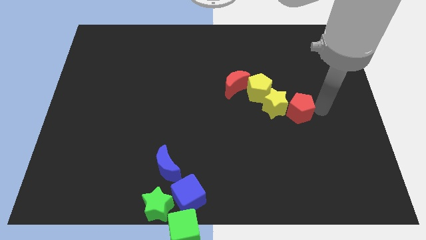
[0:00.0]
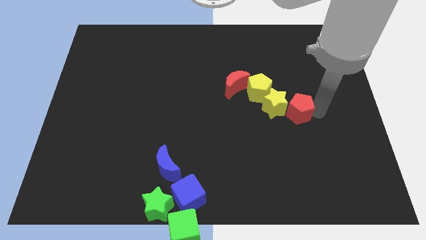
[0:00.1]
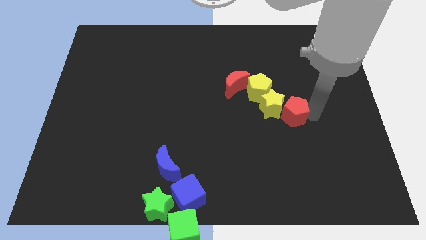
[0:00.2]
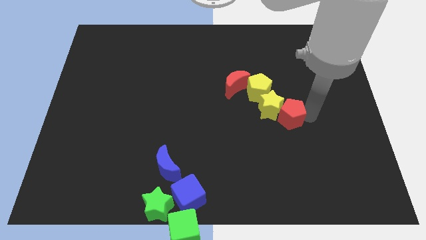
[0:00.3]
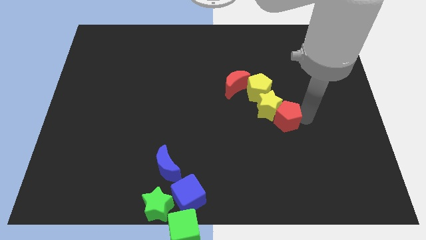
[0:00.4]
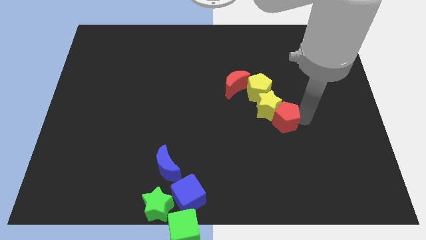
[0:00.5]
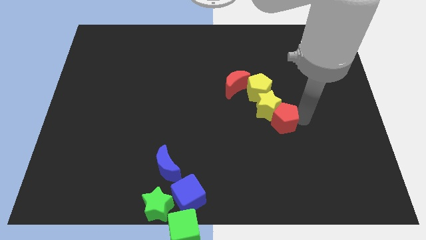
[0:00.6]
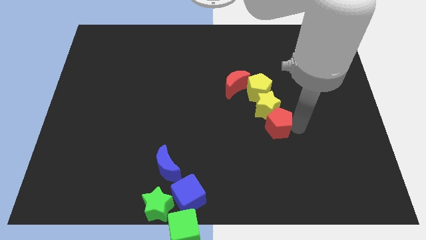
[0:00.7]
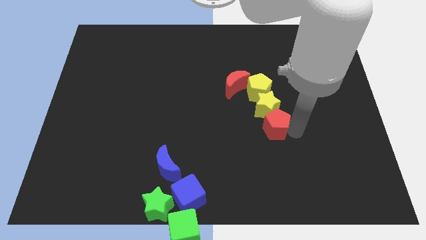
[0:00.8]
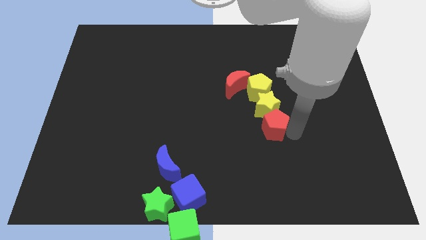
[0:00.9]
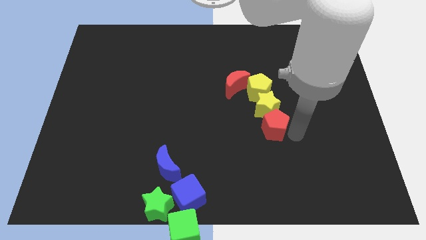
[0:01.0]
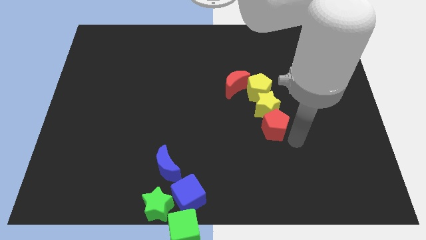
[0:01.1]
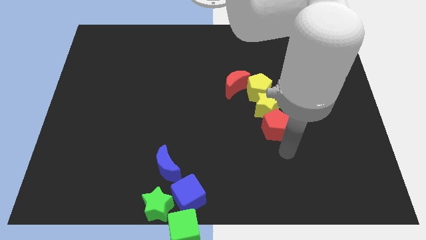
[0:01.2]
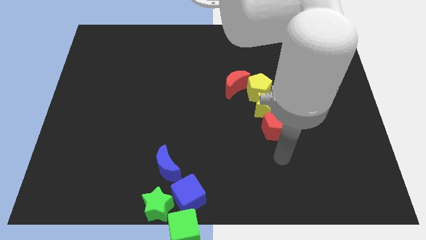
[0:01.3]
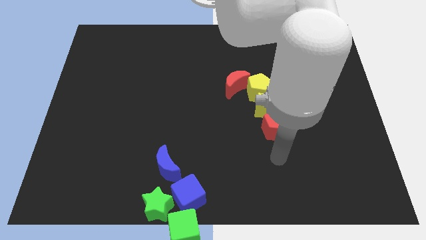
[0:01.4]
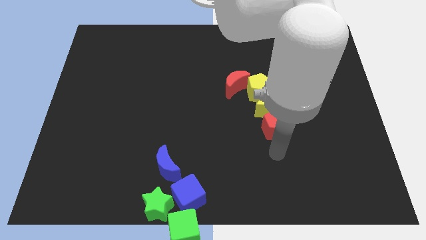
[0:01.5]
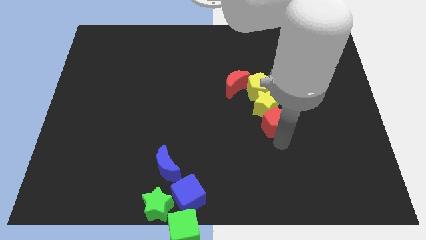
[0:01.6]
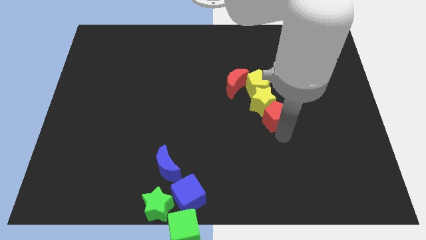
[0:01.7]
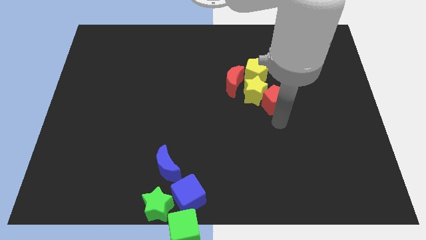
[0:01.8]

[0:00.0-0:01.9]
push the red pentagon into the yellow star

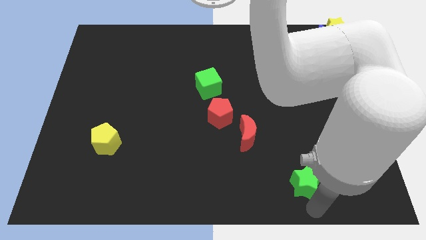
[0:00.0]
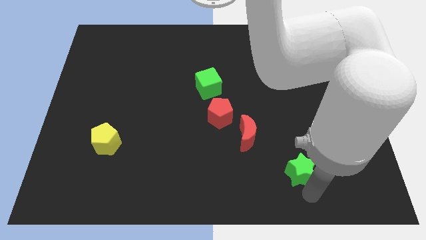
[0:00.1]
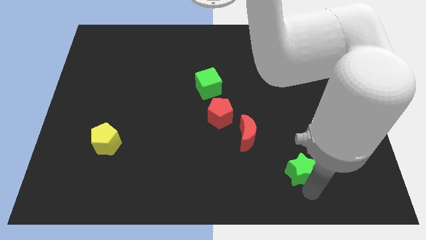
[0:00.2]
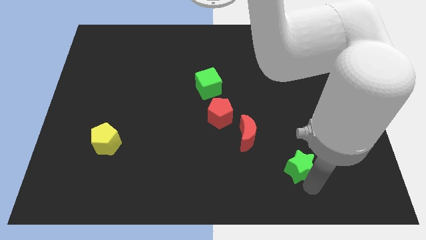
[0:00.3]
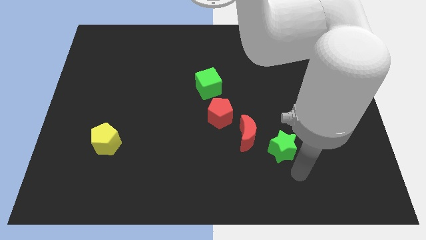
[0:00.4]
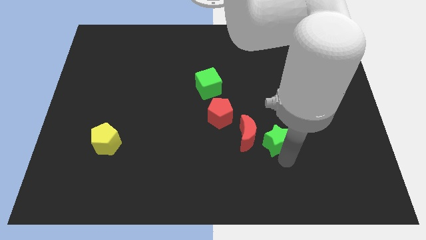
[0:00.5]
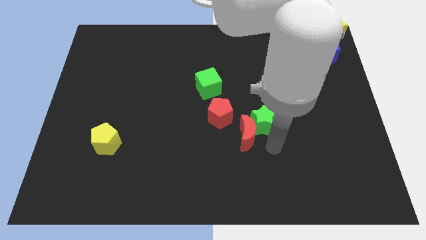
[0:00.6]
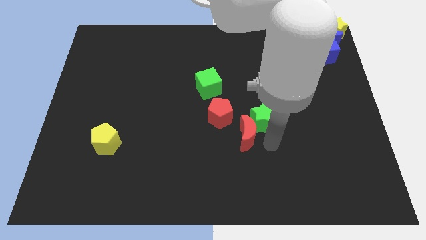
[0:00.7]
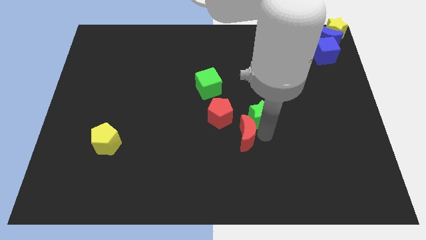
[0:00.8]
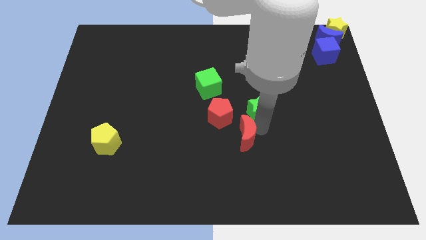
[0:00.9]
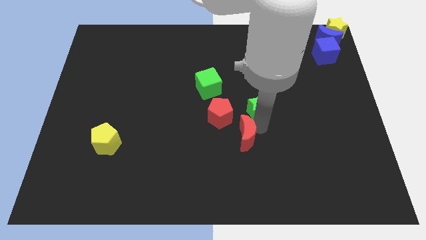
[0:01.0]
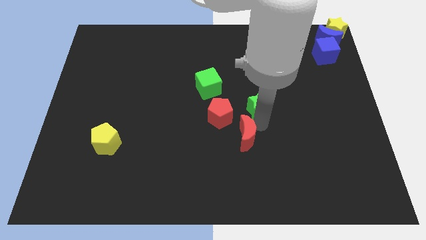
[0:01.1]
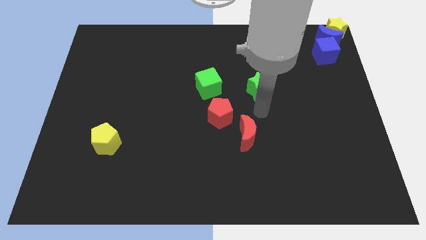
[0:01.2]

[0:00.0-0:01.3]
move green star towards center of the board

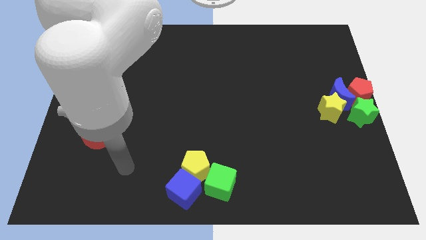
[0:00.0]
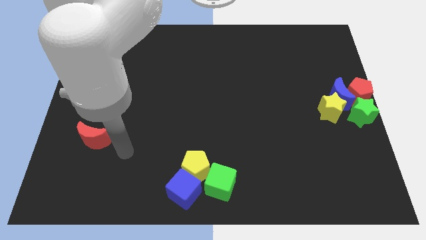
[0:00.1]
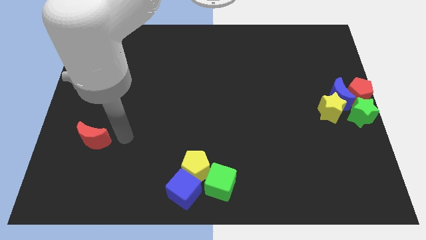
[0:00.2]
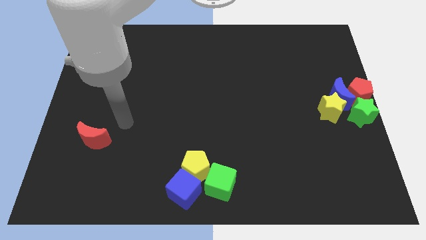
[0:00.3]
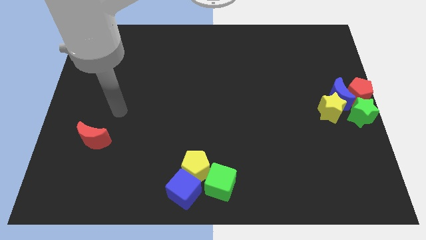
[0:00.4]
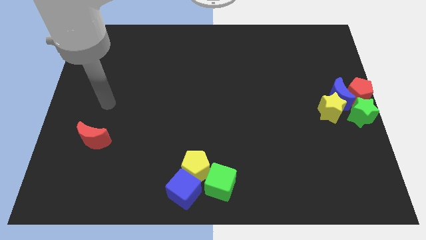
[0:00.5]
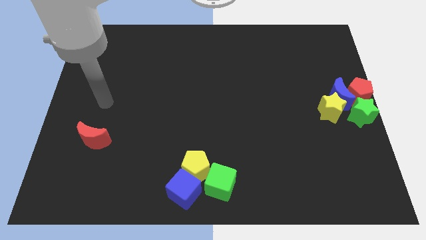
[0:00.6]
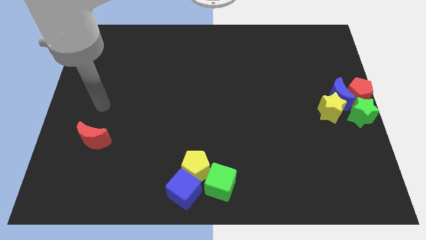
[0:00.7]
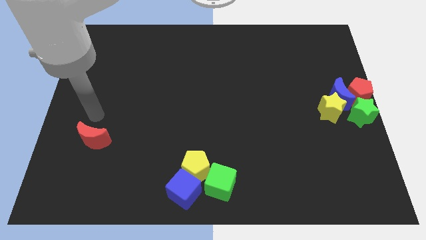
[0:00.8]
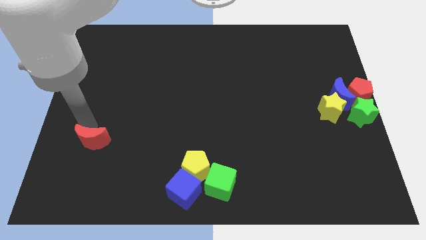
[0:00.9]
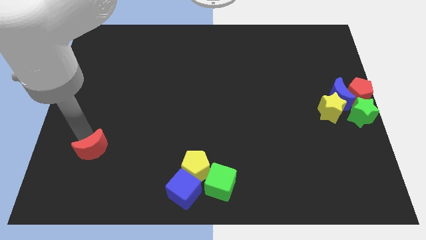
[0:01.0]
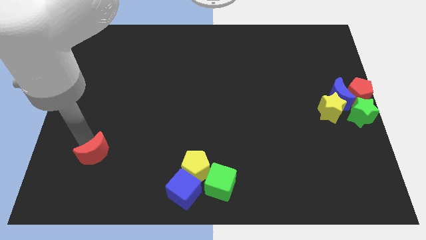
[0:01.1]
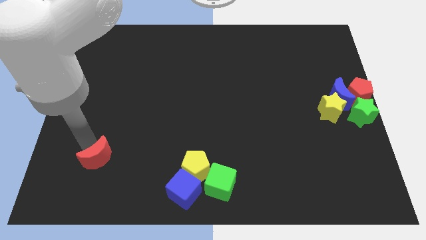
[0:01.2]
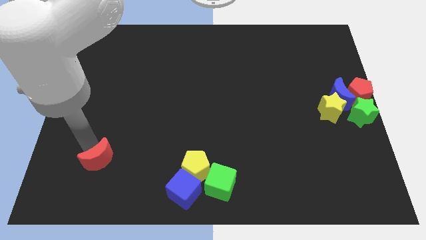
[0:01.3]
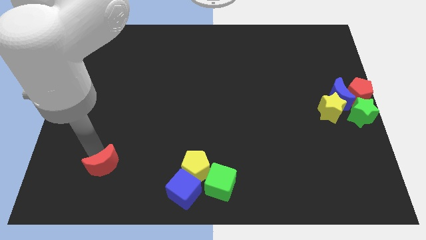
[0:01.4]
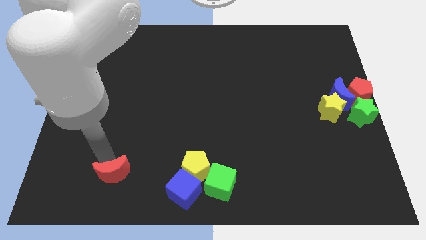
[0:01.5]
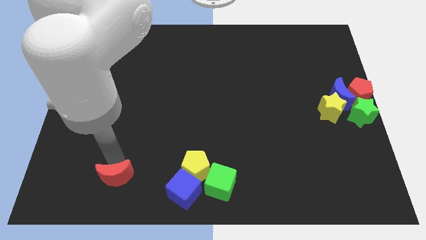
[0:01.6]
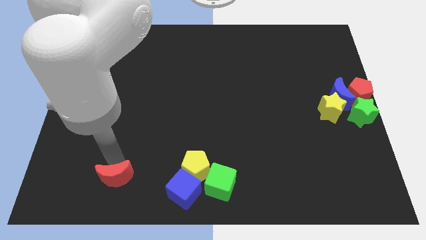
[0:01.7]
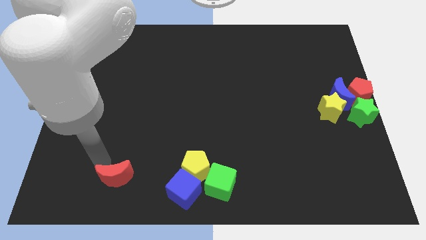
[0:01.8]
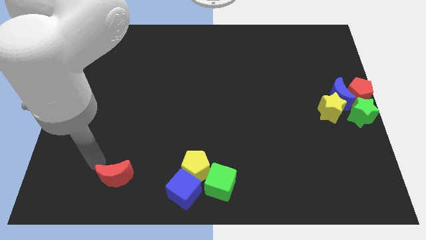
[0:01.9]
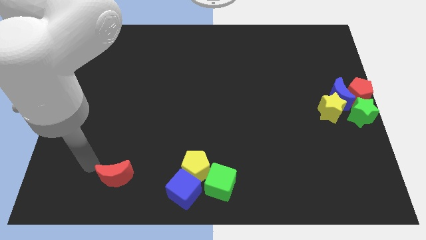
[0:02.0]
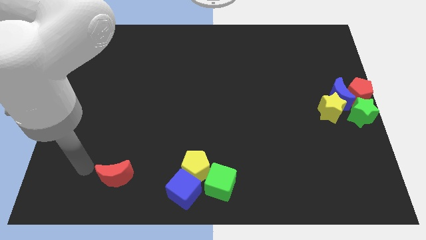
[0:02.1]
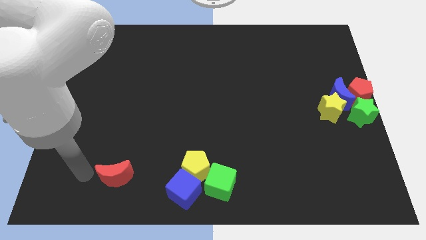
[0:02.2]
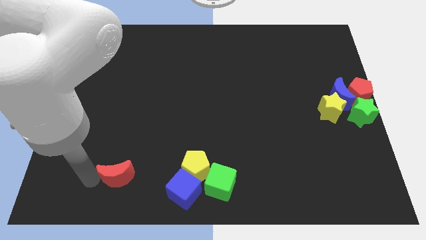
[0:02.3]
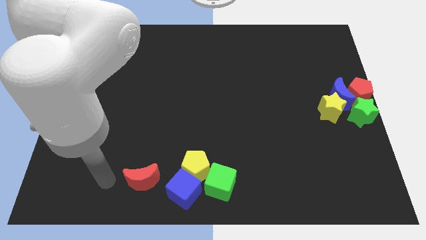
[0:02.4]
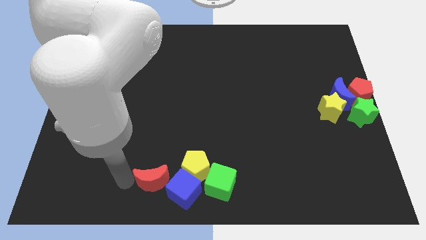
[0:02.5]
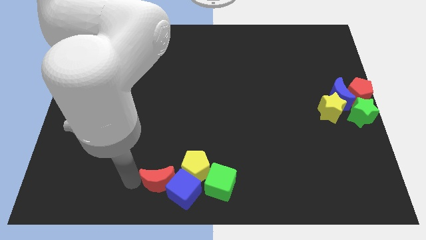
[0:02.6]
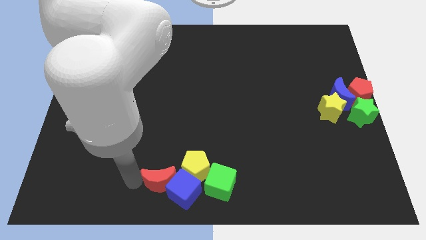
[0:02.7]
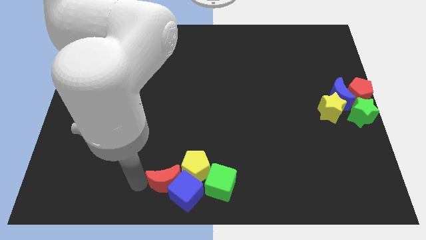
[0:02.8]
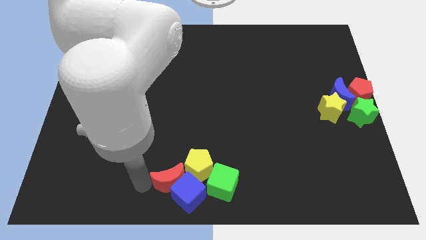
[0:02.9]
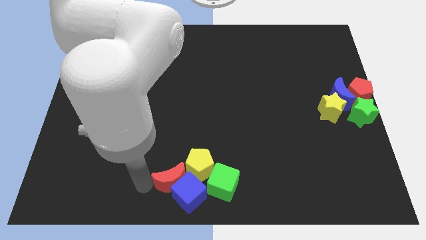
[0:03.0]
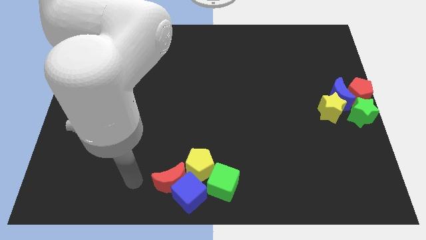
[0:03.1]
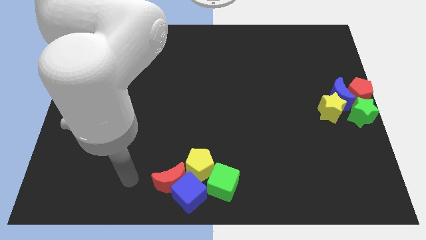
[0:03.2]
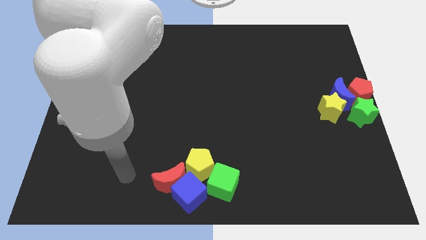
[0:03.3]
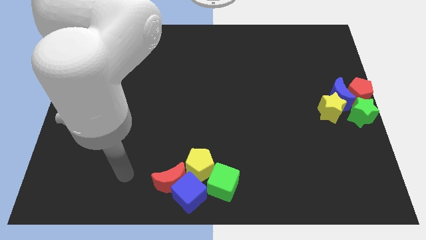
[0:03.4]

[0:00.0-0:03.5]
place red moon to the top of blue cube

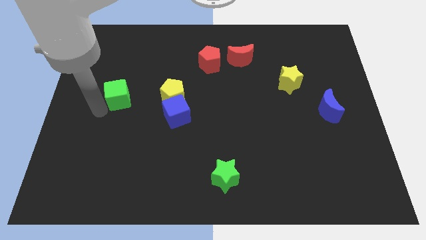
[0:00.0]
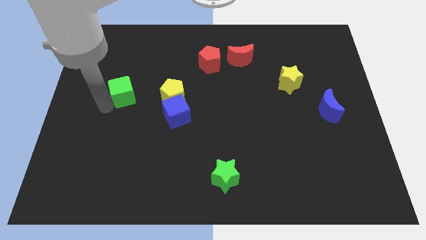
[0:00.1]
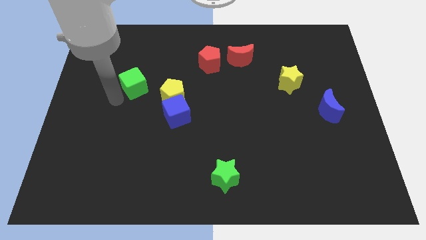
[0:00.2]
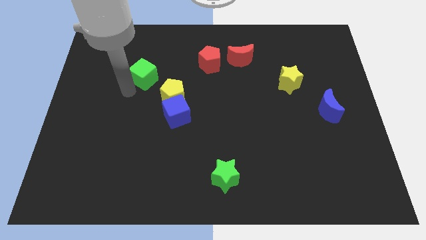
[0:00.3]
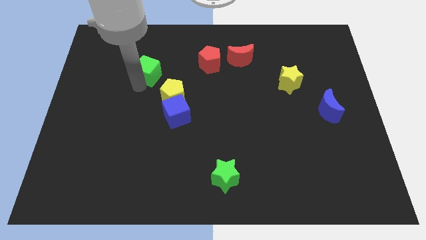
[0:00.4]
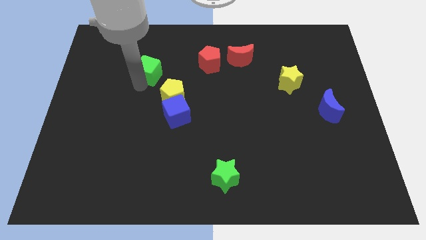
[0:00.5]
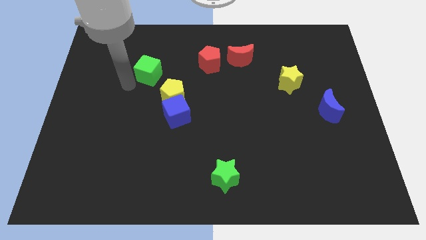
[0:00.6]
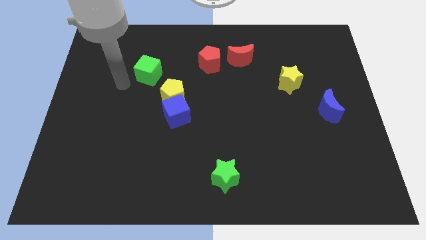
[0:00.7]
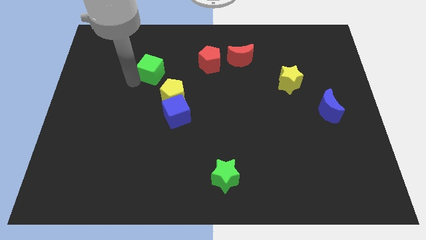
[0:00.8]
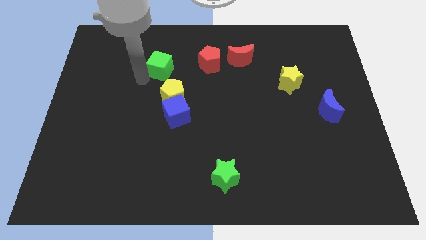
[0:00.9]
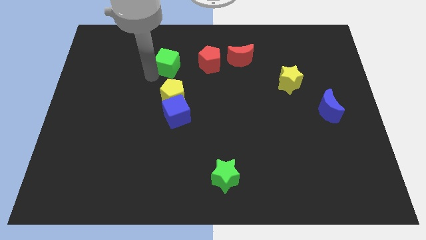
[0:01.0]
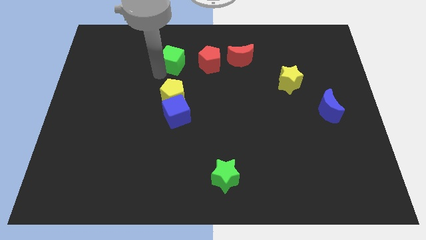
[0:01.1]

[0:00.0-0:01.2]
place green cube to the top of yellow pentagon

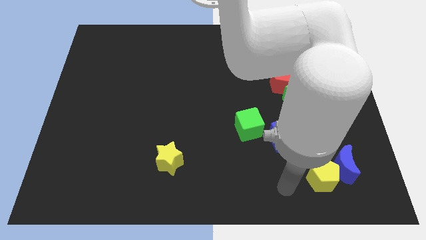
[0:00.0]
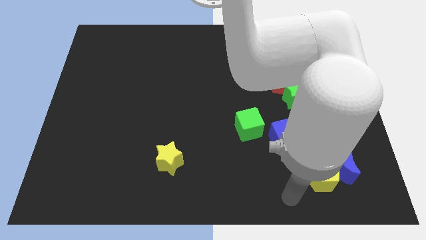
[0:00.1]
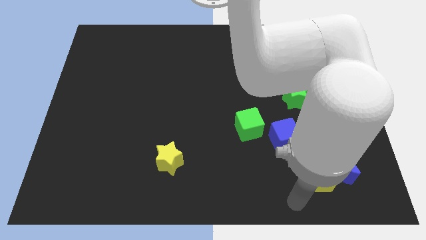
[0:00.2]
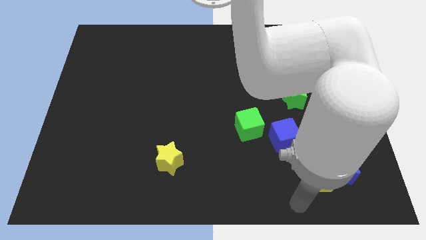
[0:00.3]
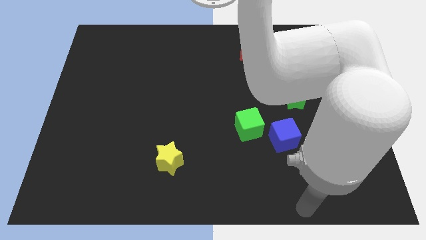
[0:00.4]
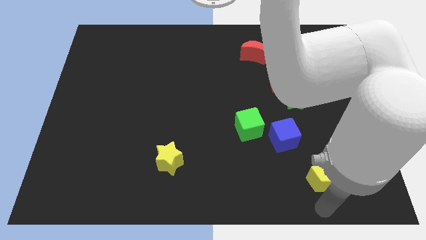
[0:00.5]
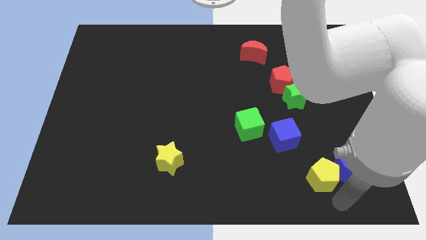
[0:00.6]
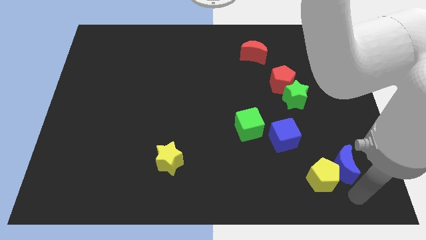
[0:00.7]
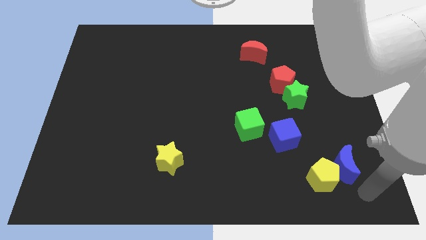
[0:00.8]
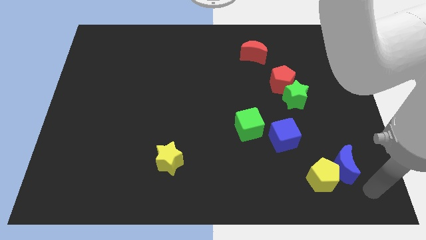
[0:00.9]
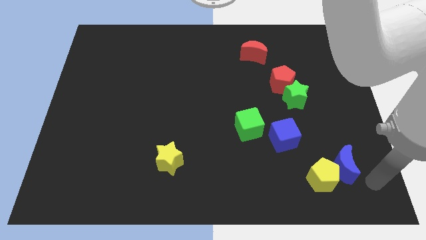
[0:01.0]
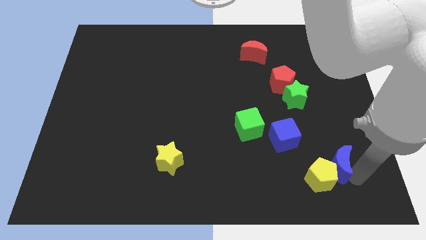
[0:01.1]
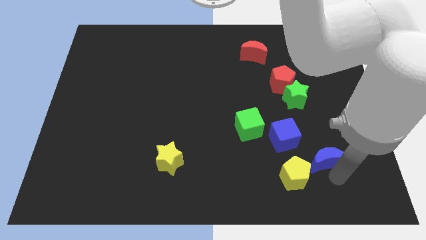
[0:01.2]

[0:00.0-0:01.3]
place the arm right to the blue moon
